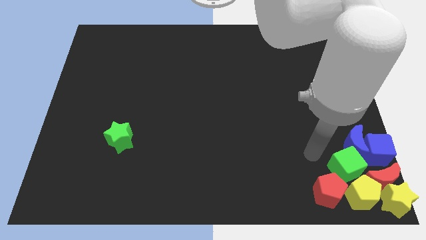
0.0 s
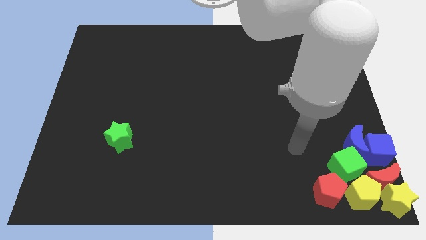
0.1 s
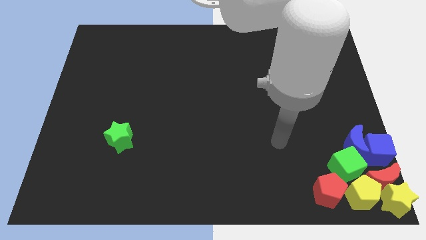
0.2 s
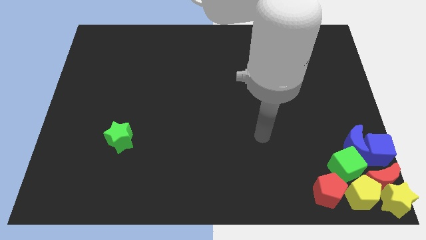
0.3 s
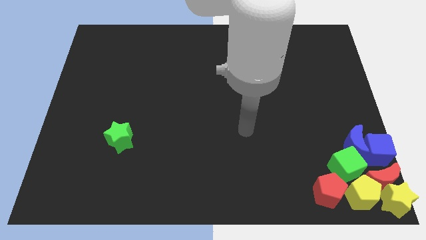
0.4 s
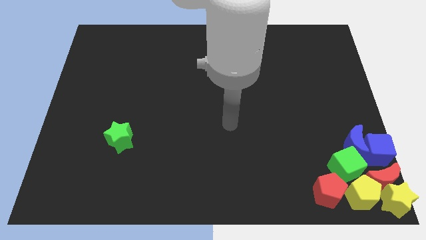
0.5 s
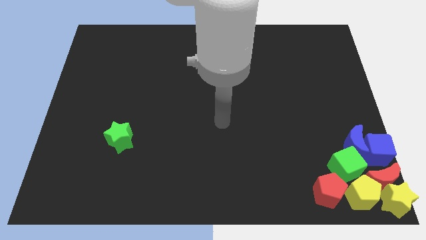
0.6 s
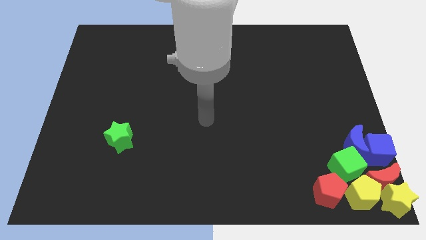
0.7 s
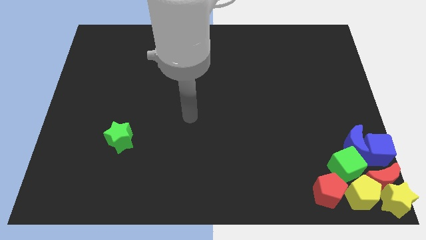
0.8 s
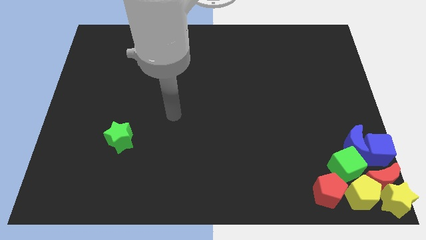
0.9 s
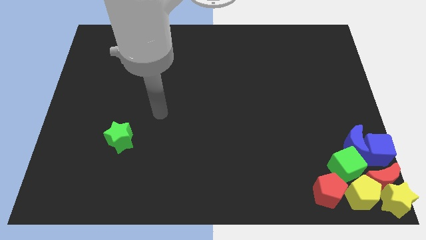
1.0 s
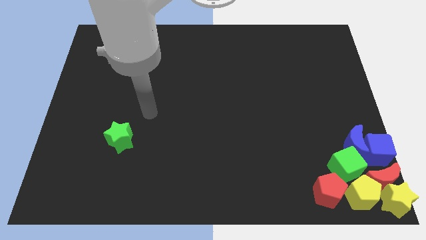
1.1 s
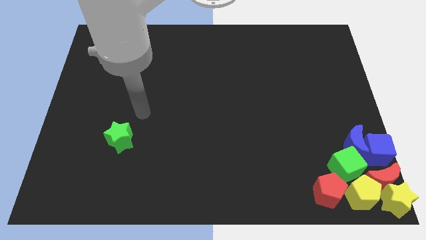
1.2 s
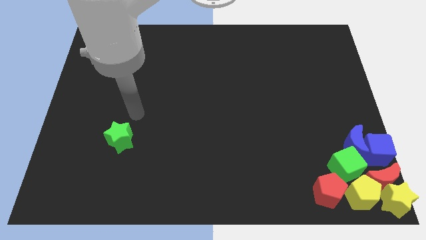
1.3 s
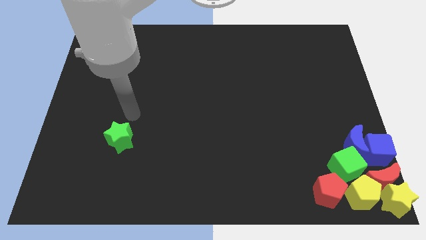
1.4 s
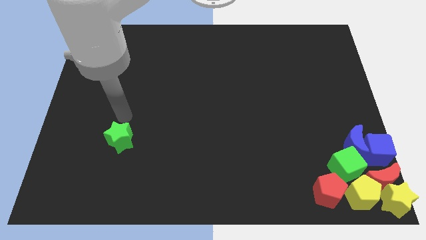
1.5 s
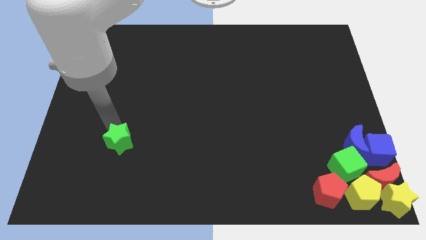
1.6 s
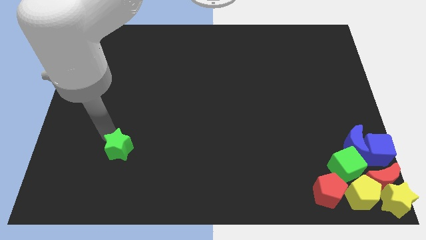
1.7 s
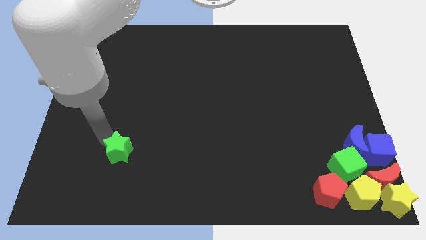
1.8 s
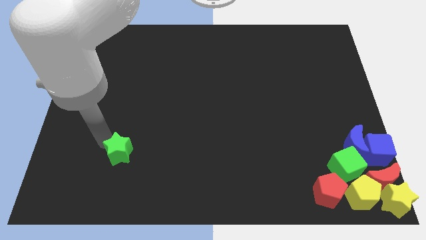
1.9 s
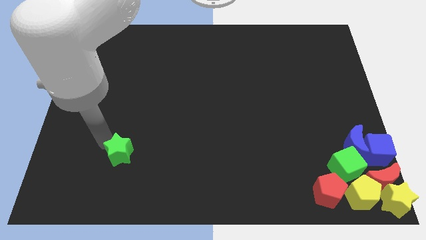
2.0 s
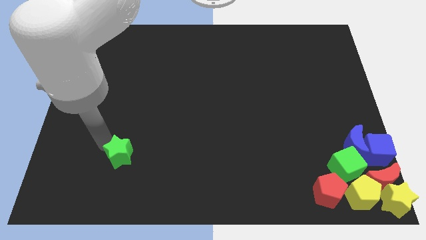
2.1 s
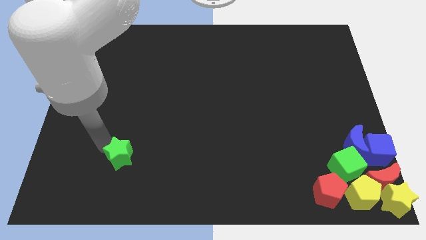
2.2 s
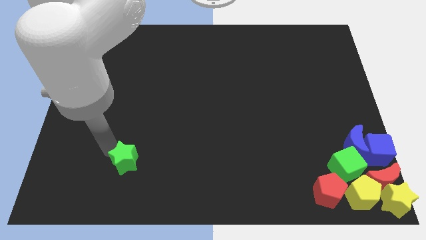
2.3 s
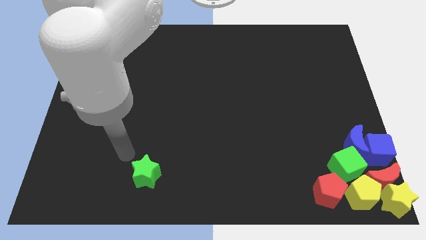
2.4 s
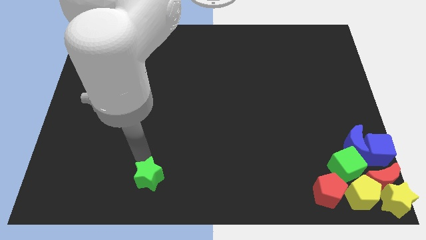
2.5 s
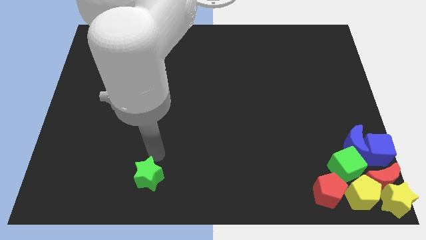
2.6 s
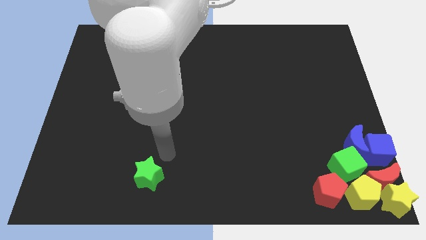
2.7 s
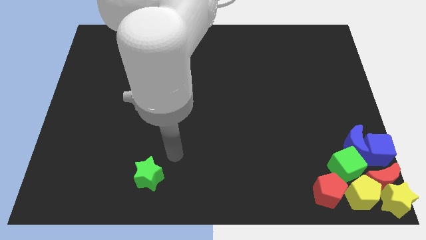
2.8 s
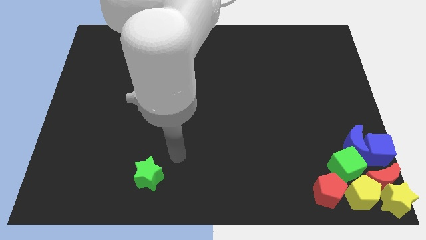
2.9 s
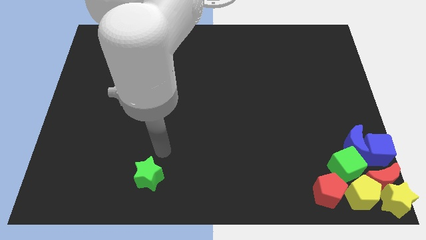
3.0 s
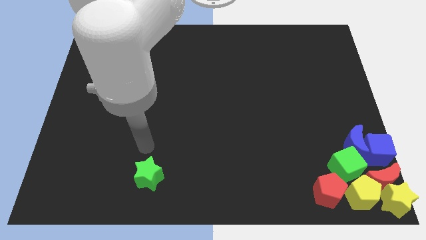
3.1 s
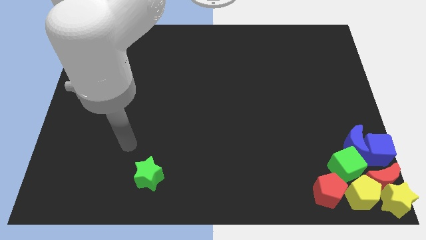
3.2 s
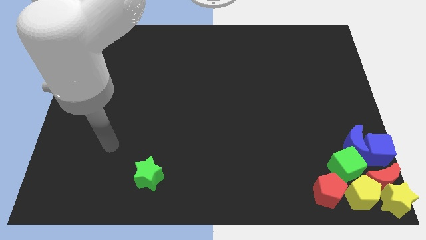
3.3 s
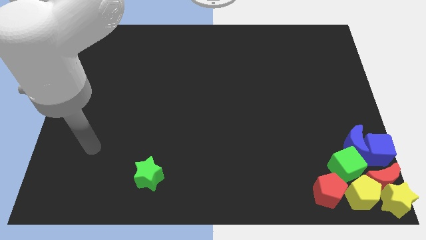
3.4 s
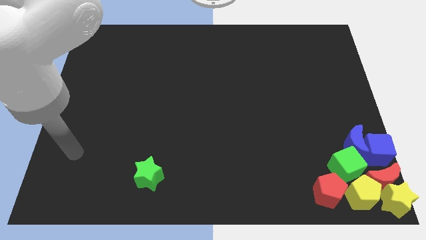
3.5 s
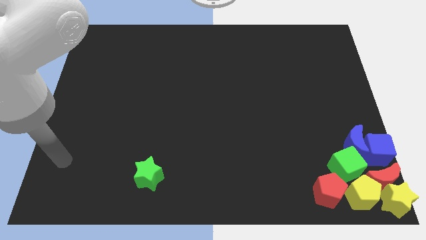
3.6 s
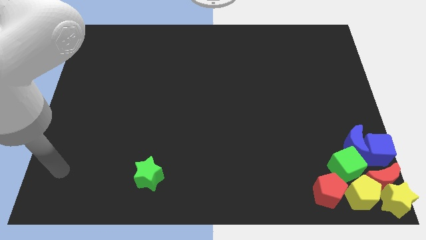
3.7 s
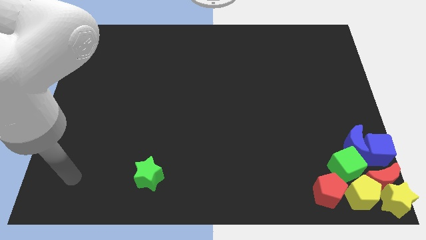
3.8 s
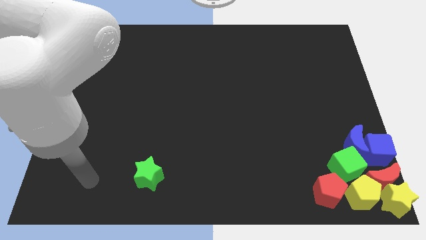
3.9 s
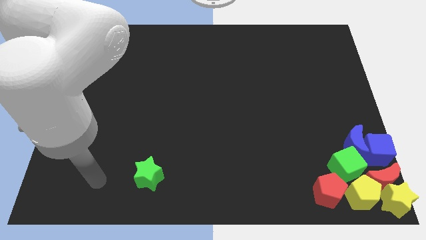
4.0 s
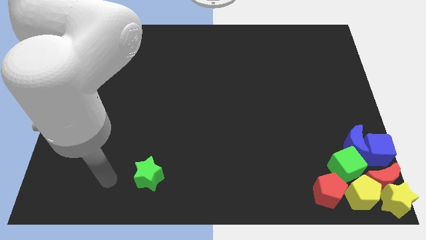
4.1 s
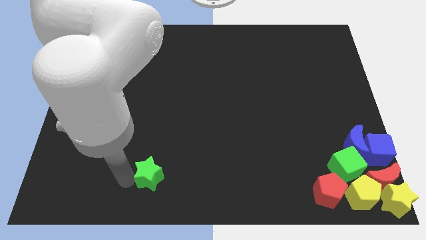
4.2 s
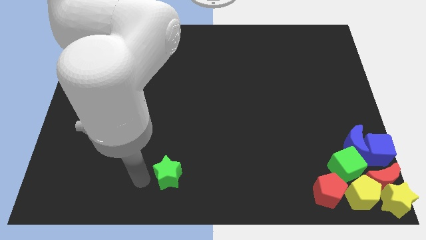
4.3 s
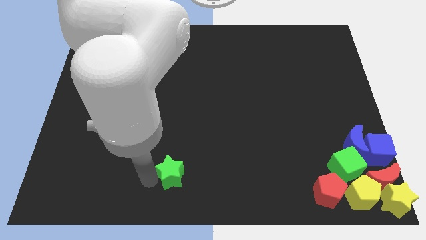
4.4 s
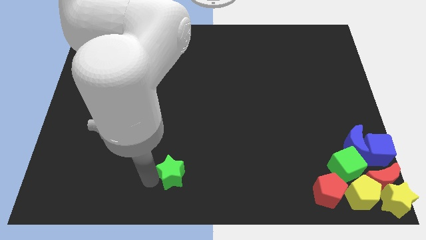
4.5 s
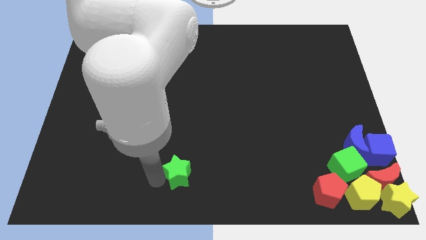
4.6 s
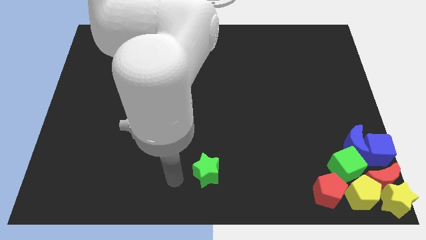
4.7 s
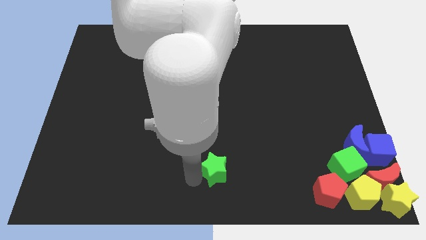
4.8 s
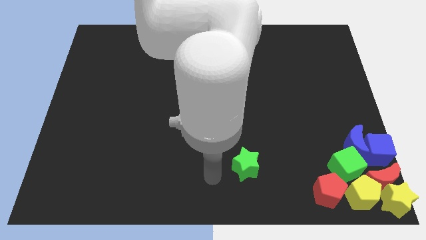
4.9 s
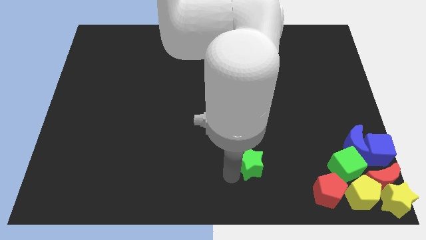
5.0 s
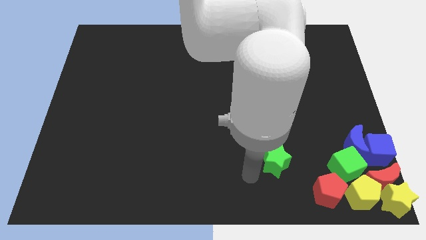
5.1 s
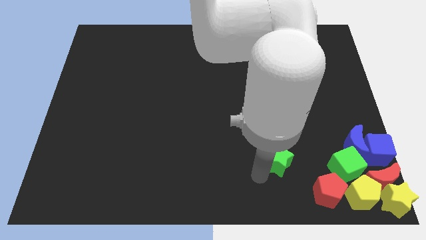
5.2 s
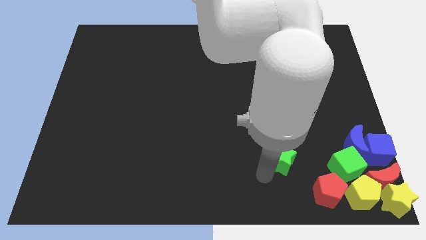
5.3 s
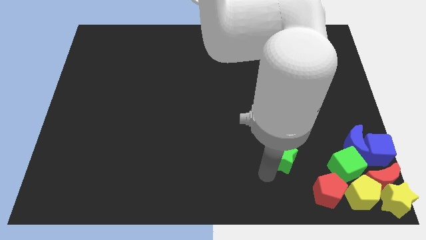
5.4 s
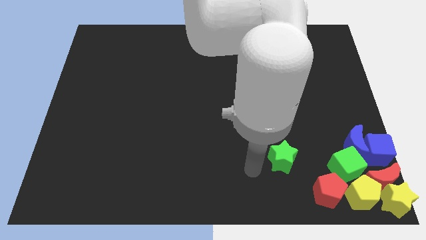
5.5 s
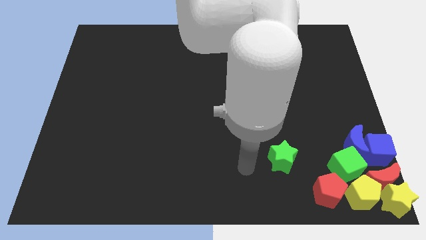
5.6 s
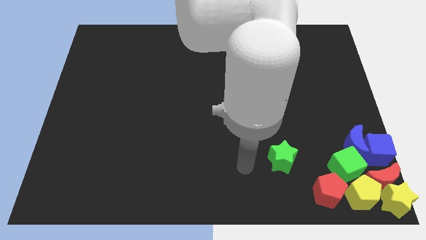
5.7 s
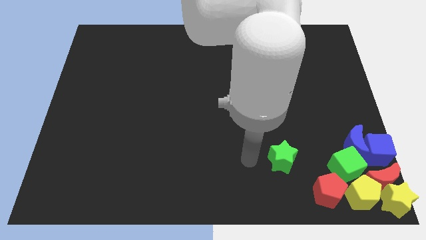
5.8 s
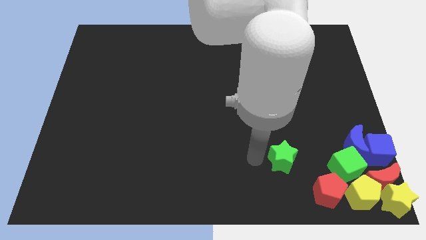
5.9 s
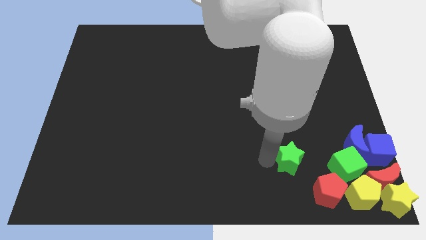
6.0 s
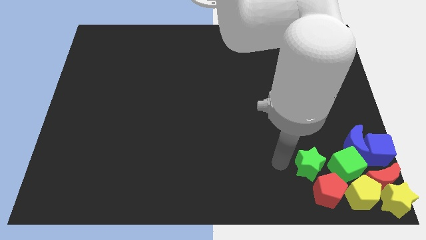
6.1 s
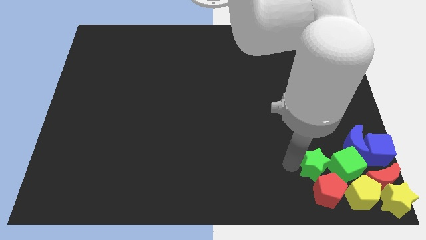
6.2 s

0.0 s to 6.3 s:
move the green star into the group of blocks

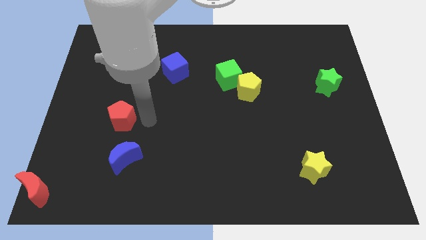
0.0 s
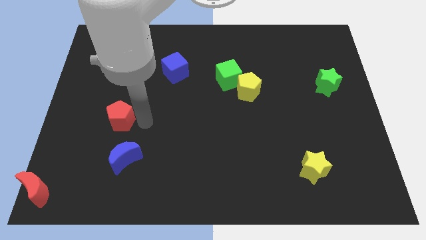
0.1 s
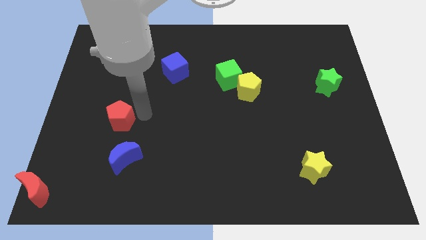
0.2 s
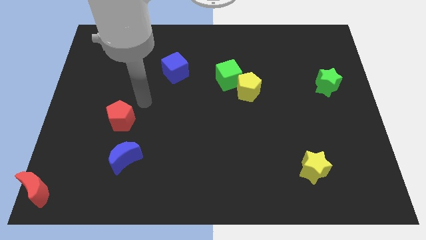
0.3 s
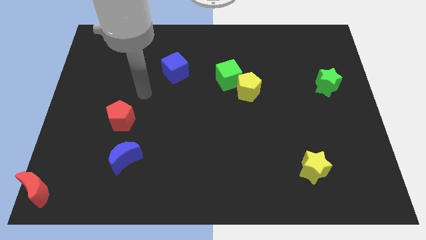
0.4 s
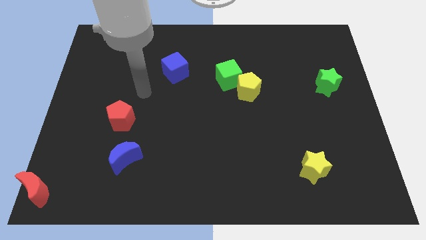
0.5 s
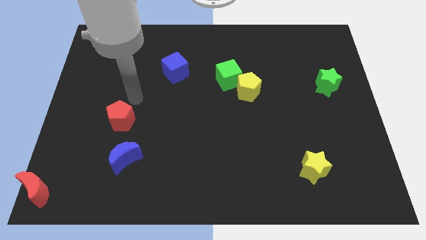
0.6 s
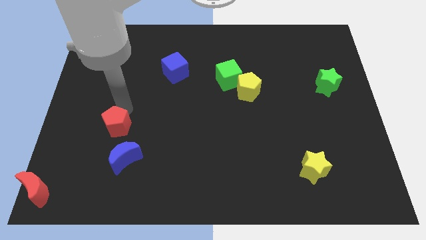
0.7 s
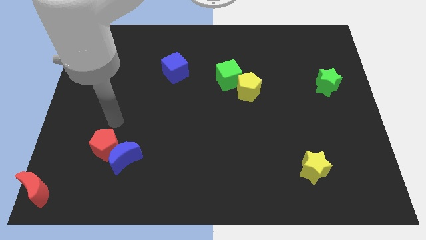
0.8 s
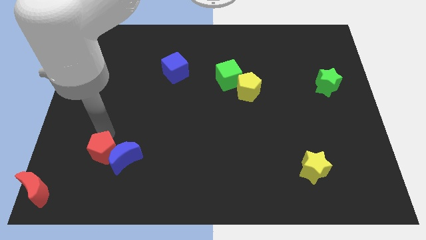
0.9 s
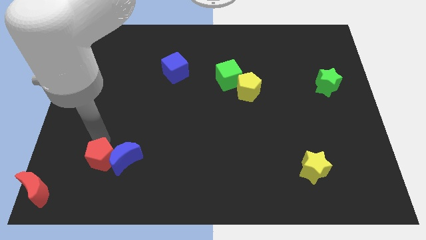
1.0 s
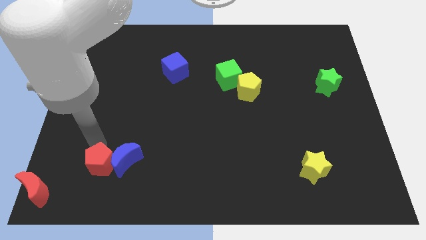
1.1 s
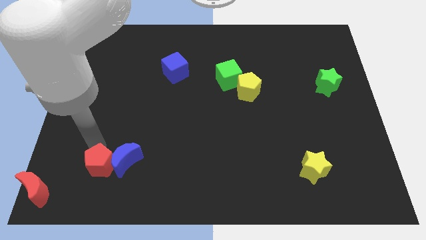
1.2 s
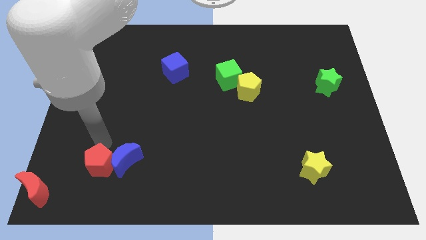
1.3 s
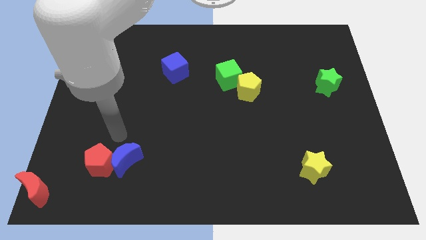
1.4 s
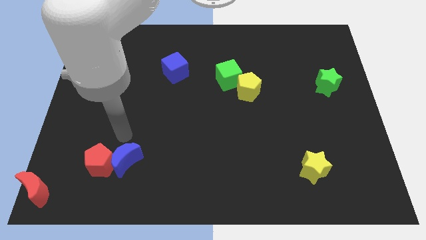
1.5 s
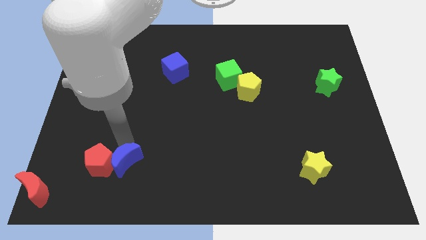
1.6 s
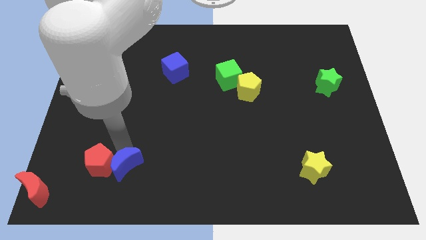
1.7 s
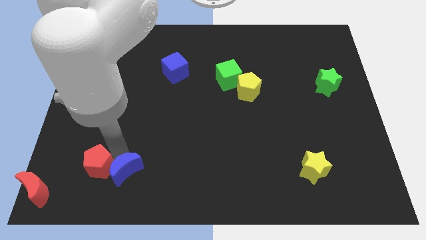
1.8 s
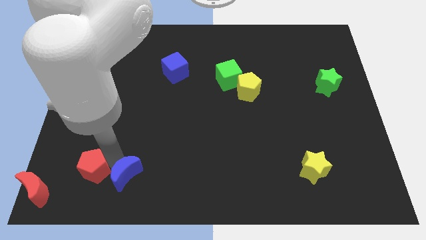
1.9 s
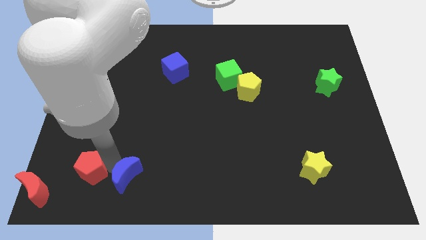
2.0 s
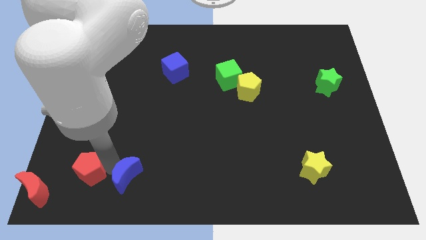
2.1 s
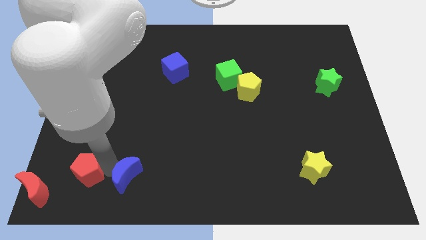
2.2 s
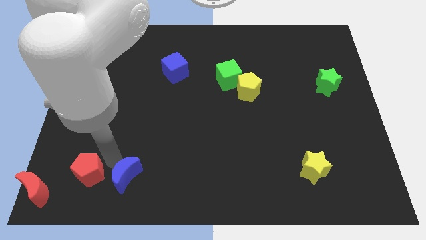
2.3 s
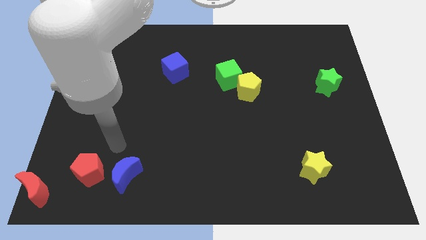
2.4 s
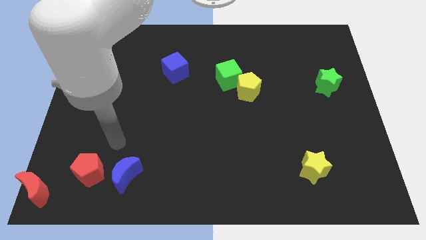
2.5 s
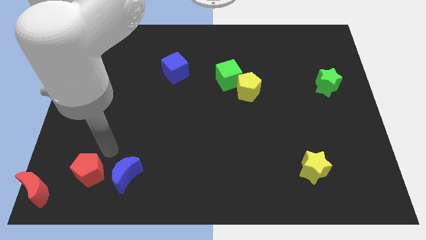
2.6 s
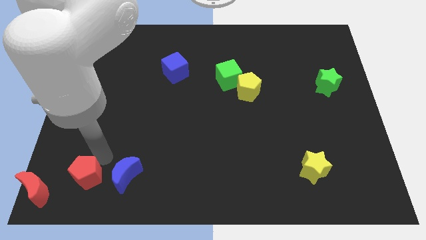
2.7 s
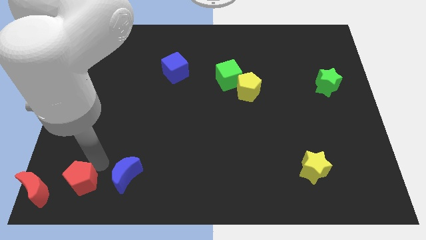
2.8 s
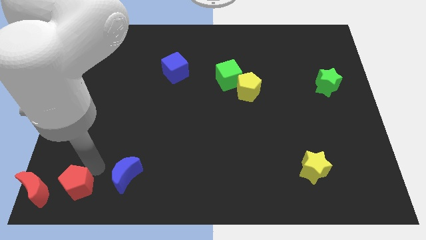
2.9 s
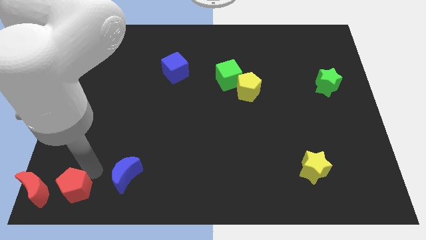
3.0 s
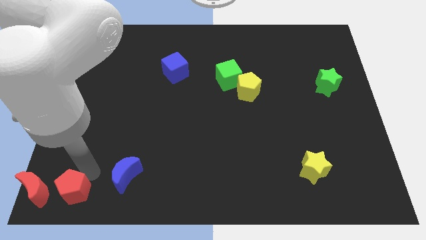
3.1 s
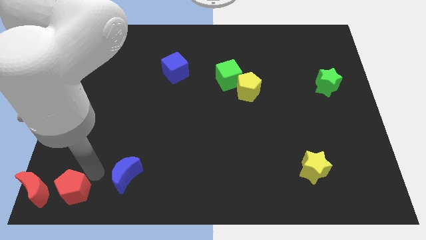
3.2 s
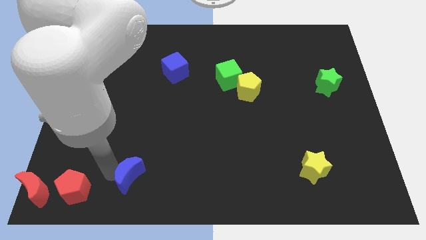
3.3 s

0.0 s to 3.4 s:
put the red pentagon at the right side of the red moon
